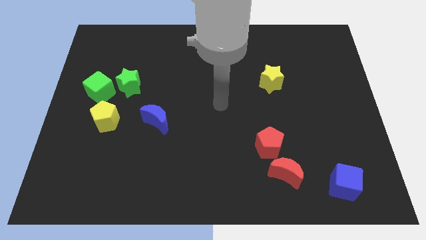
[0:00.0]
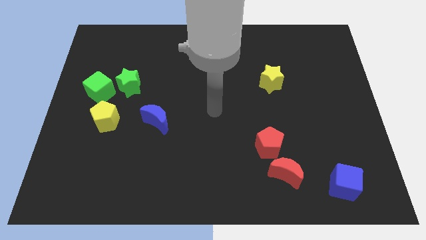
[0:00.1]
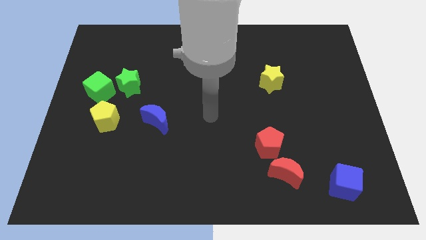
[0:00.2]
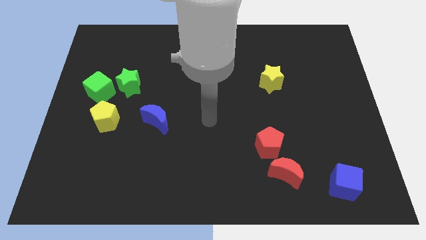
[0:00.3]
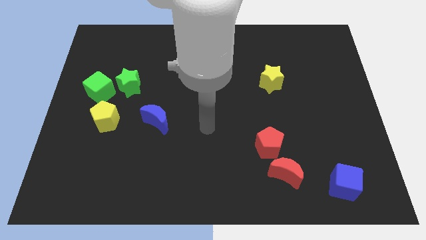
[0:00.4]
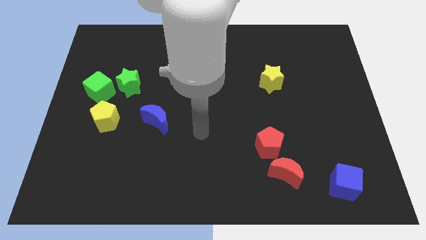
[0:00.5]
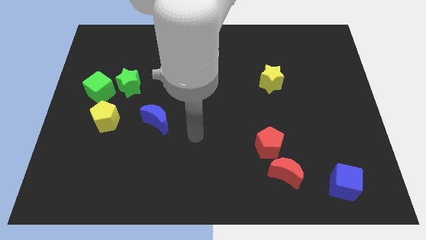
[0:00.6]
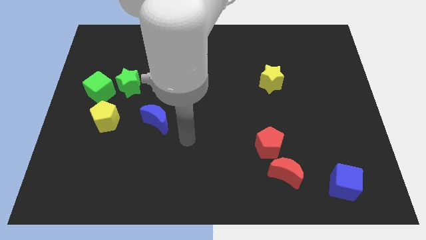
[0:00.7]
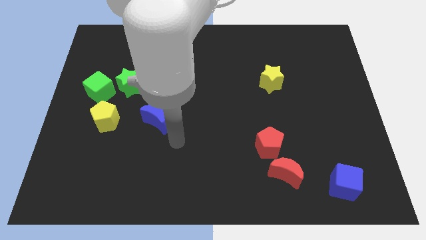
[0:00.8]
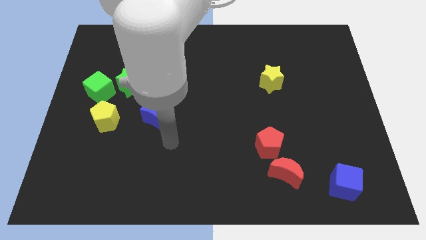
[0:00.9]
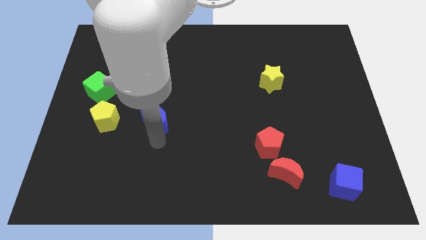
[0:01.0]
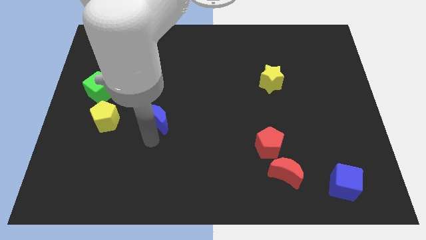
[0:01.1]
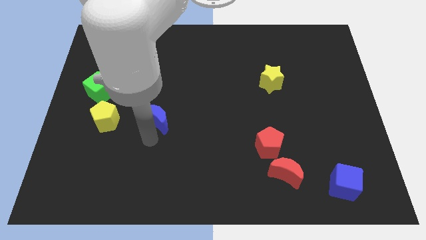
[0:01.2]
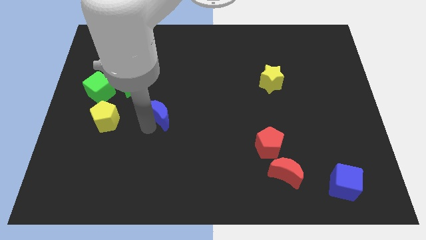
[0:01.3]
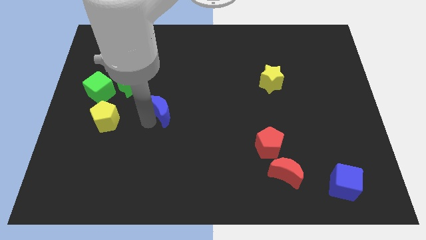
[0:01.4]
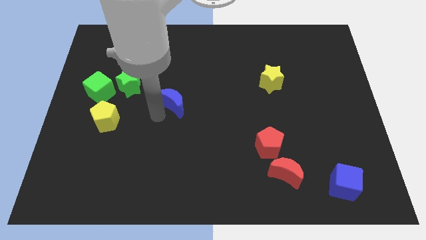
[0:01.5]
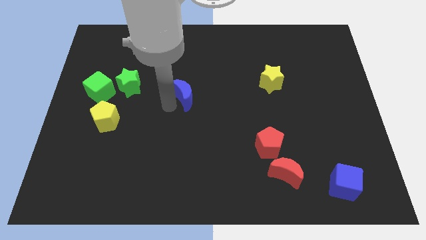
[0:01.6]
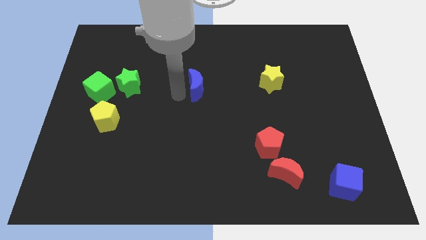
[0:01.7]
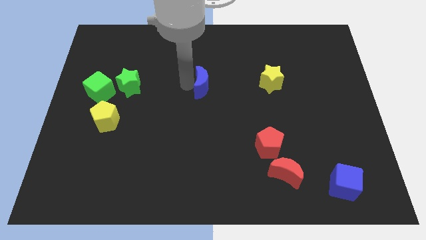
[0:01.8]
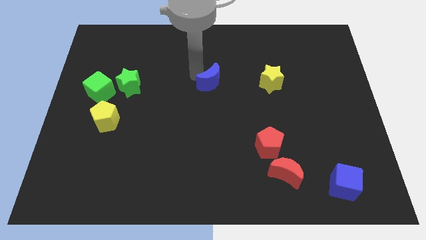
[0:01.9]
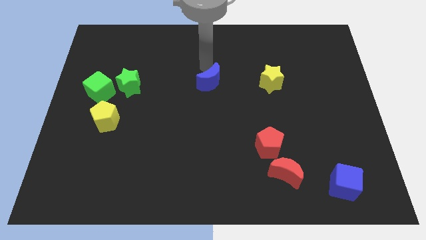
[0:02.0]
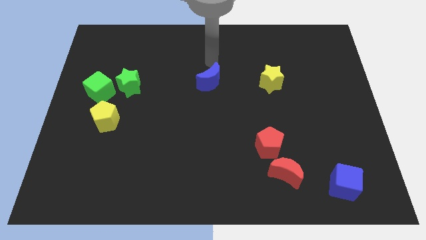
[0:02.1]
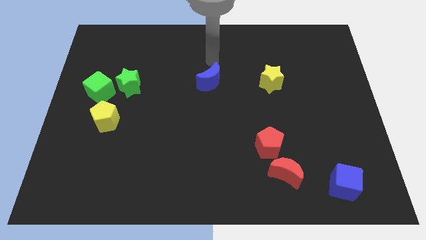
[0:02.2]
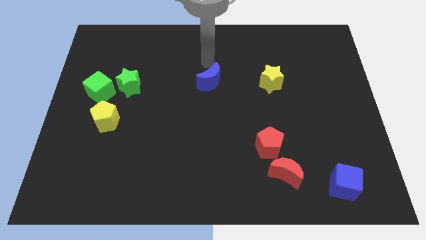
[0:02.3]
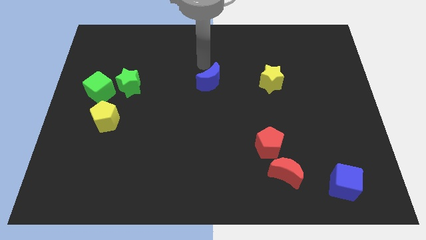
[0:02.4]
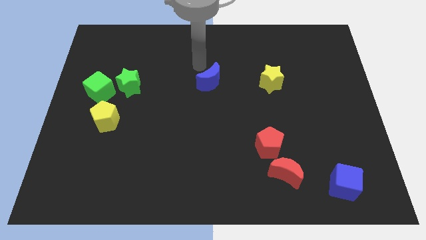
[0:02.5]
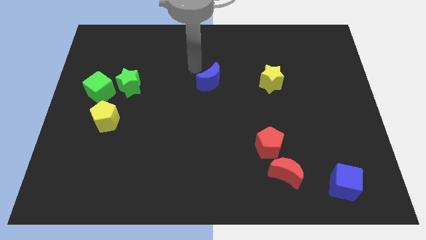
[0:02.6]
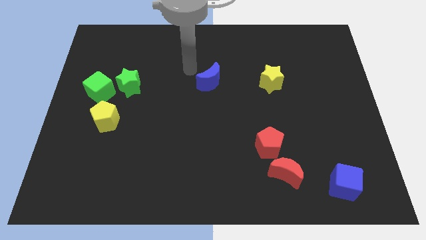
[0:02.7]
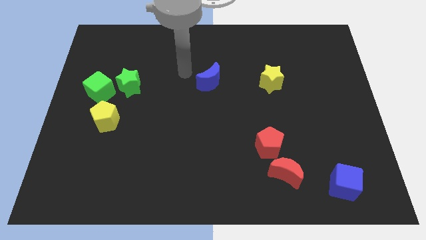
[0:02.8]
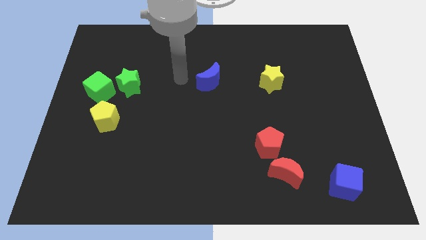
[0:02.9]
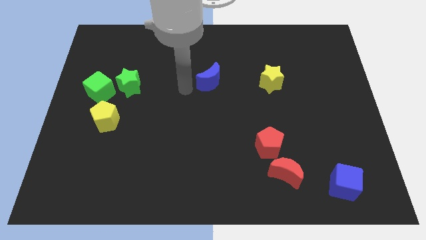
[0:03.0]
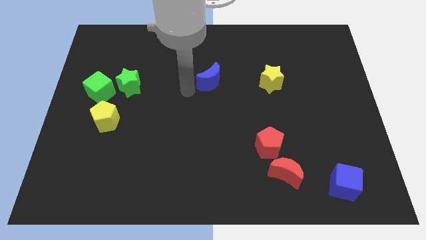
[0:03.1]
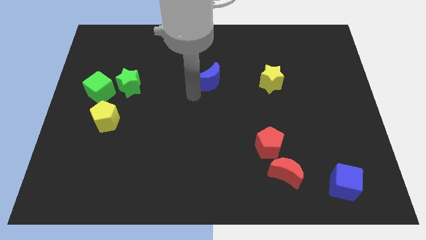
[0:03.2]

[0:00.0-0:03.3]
put the blue moon parallel right to the green star

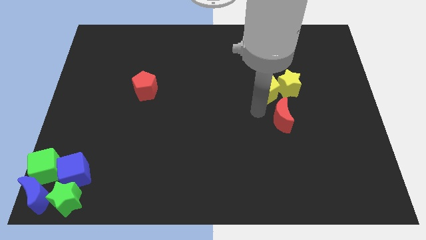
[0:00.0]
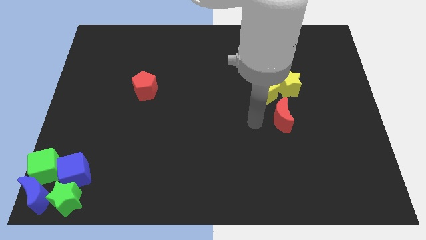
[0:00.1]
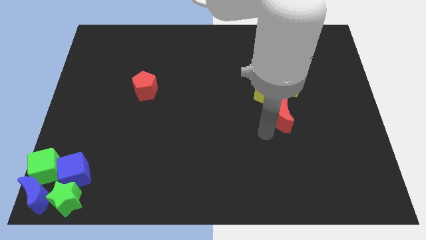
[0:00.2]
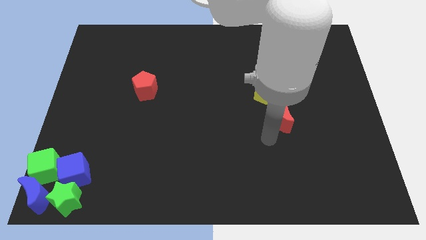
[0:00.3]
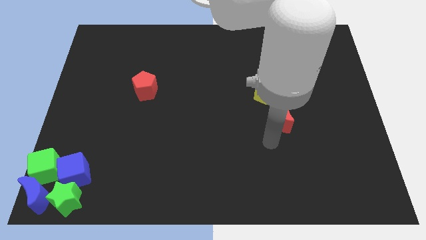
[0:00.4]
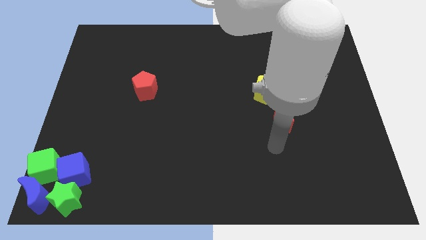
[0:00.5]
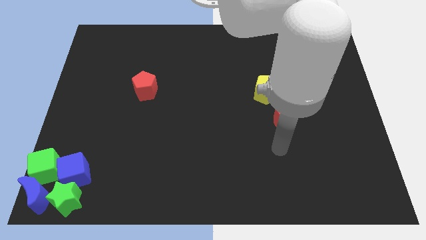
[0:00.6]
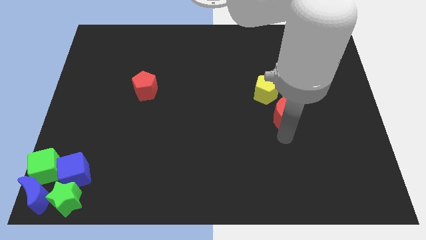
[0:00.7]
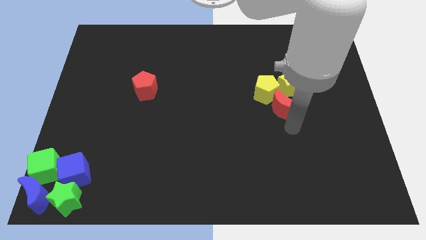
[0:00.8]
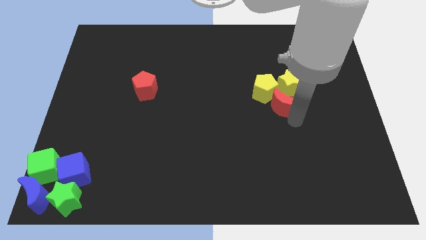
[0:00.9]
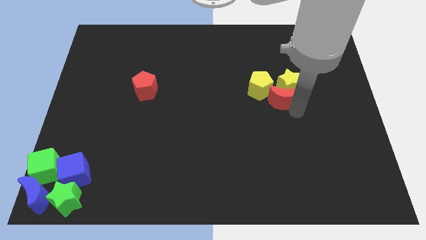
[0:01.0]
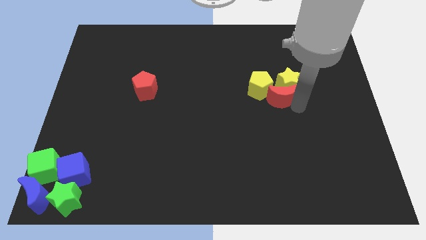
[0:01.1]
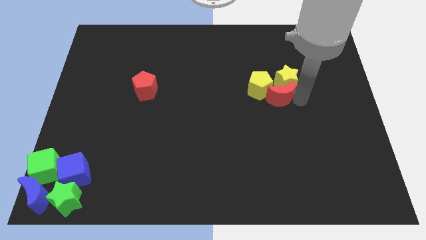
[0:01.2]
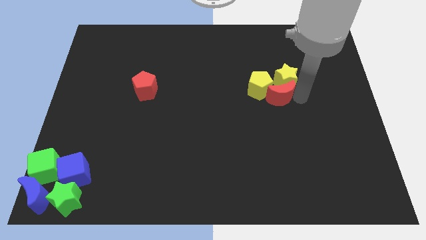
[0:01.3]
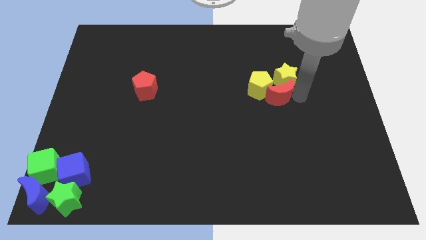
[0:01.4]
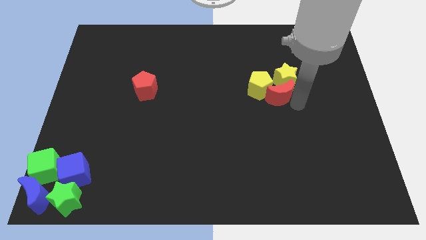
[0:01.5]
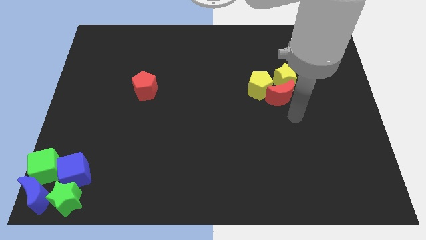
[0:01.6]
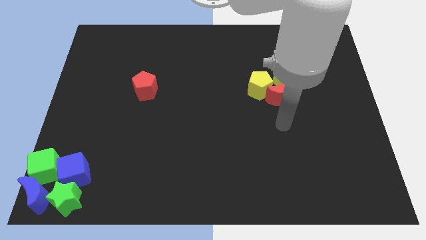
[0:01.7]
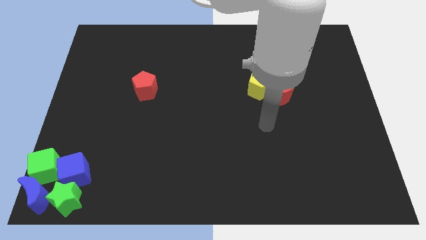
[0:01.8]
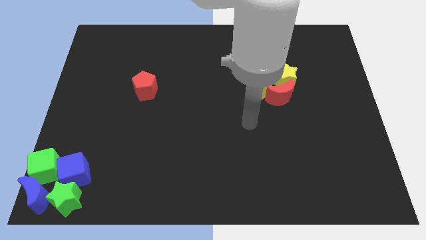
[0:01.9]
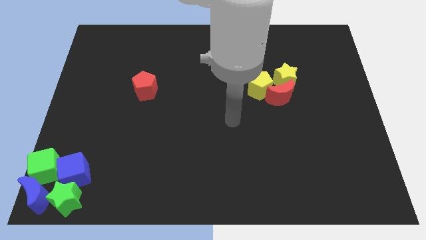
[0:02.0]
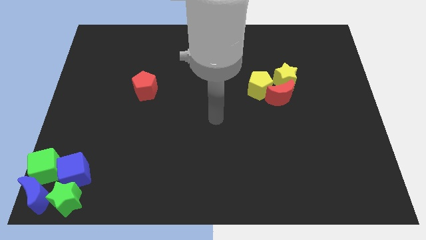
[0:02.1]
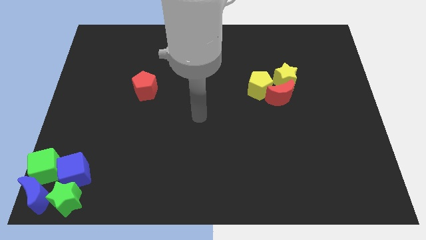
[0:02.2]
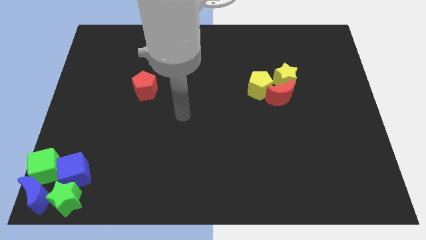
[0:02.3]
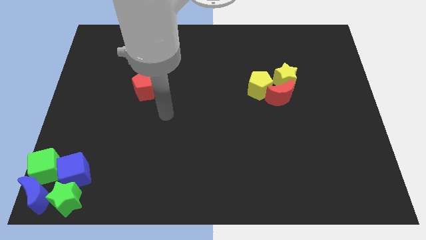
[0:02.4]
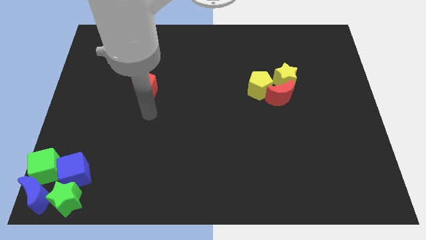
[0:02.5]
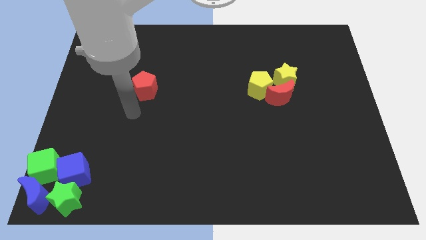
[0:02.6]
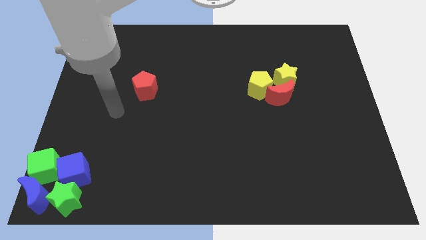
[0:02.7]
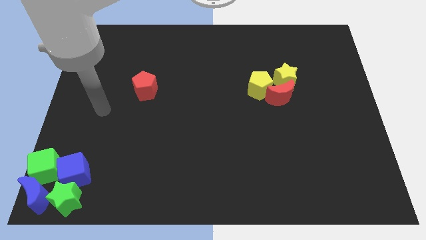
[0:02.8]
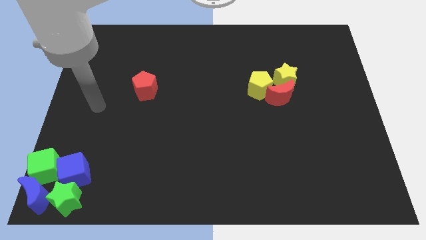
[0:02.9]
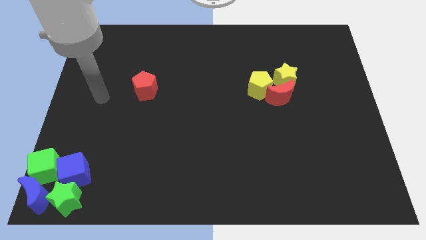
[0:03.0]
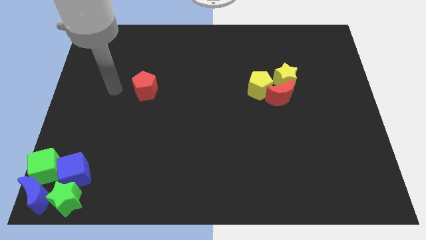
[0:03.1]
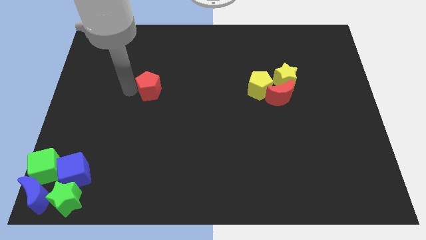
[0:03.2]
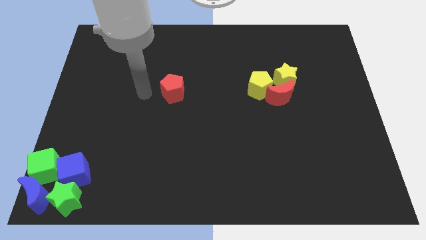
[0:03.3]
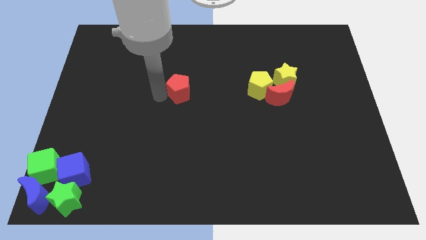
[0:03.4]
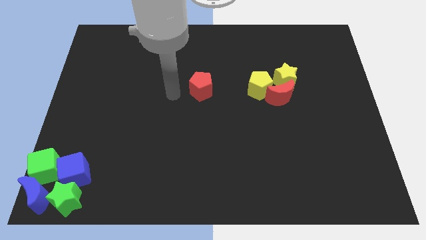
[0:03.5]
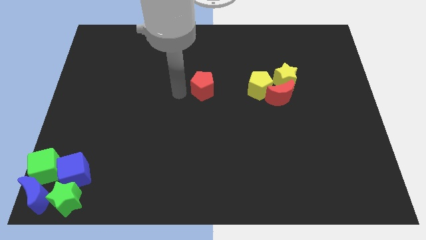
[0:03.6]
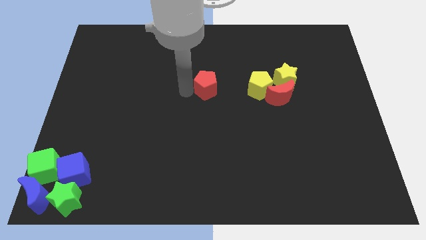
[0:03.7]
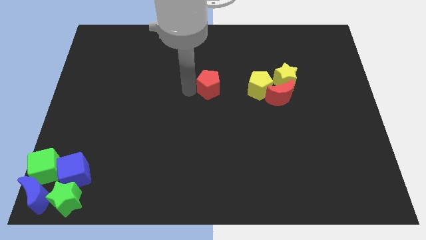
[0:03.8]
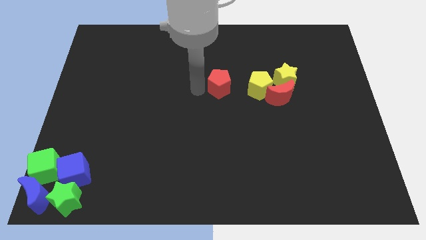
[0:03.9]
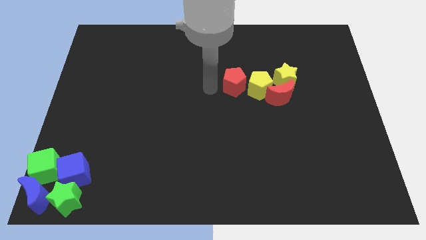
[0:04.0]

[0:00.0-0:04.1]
move red pentagon to the left of yellow pentagon

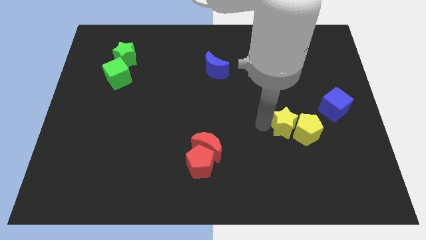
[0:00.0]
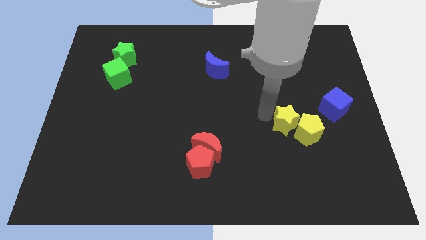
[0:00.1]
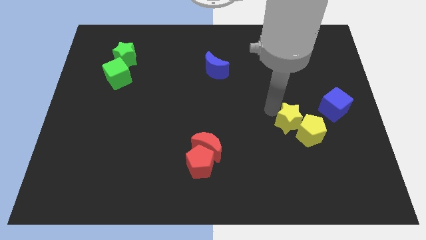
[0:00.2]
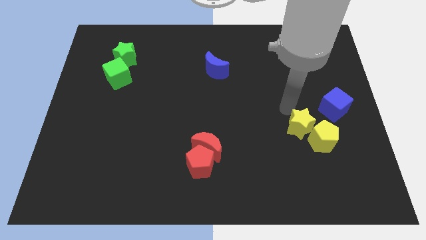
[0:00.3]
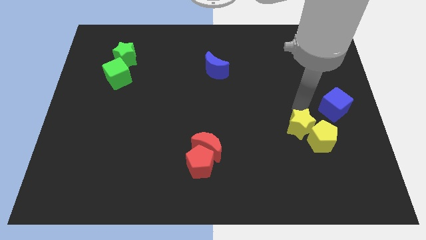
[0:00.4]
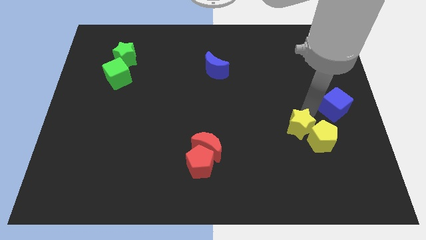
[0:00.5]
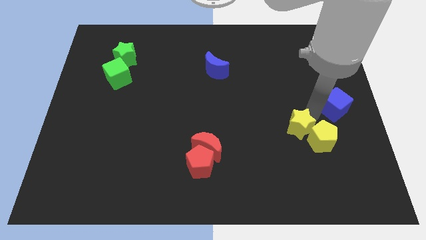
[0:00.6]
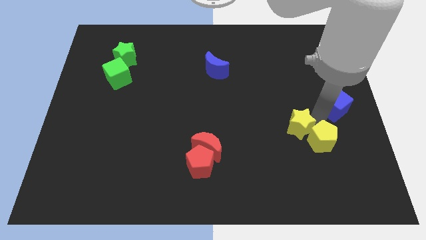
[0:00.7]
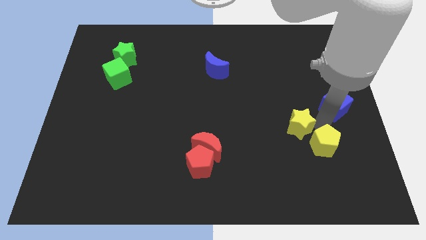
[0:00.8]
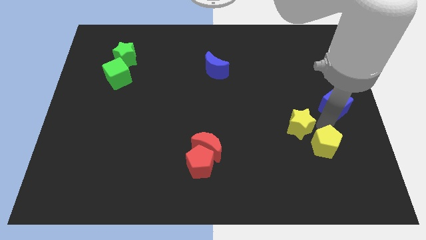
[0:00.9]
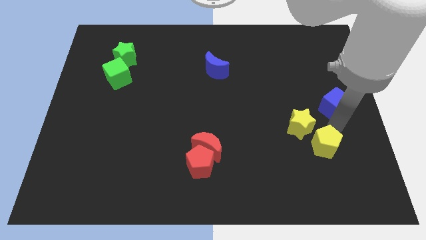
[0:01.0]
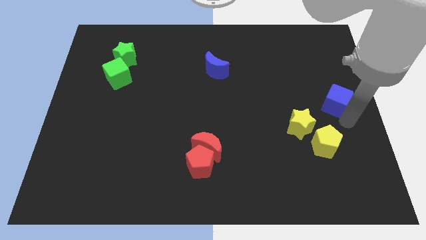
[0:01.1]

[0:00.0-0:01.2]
push the yellow star slightly downwards

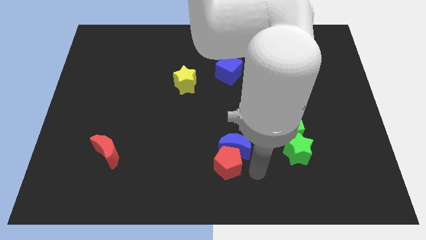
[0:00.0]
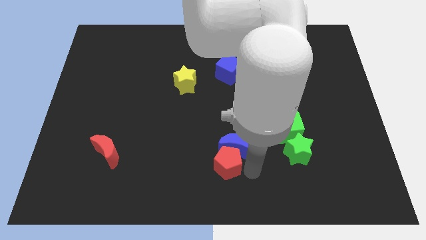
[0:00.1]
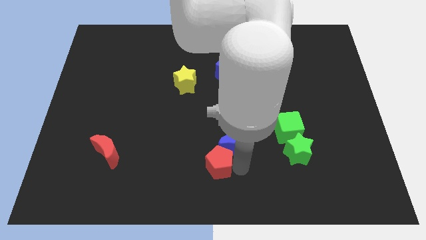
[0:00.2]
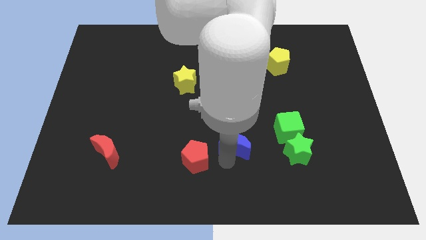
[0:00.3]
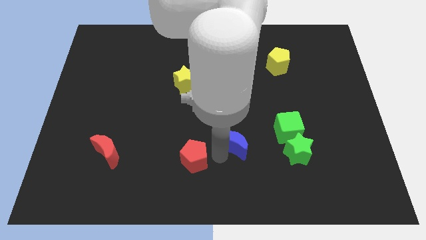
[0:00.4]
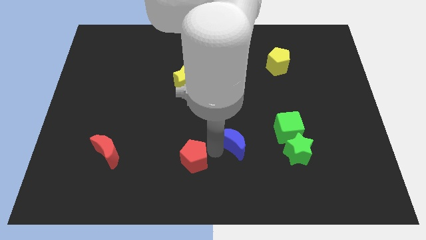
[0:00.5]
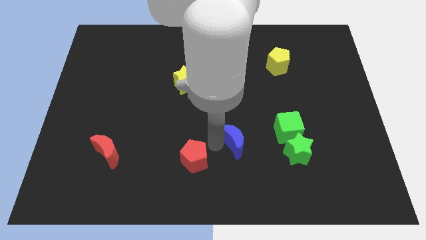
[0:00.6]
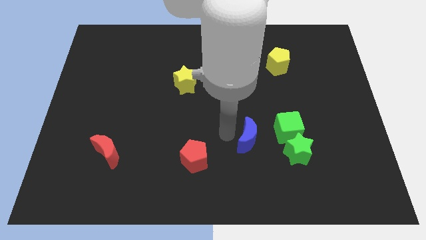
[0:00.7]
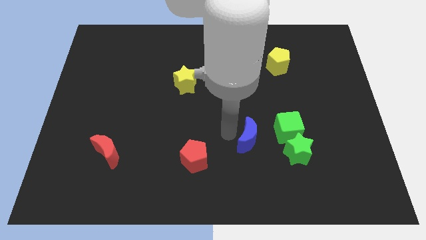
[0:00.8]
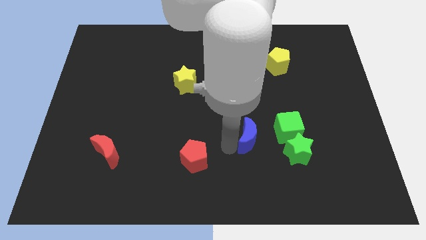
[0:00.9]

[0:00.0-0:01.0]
separate the red pentagon and the blue moon
